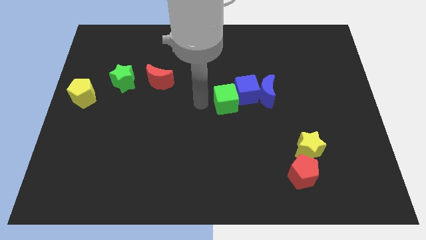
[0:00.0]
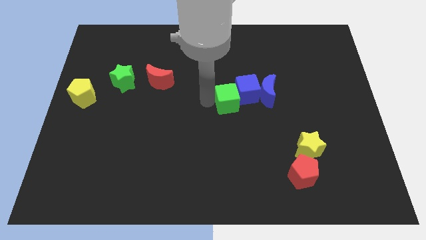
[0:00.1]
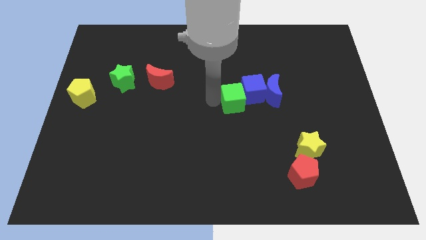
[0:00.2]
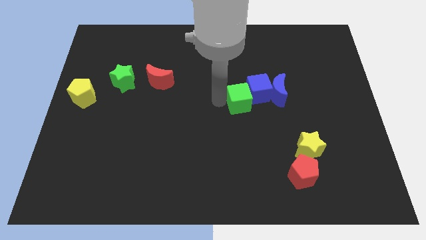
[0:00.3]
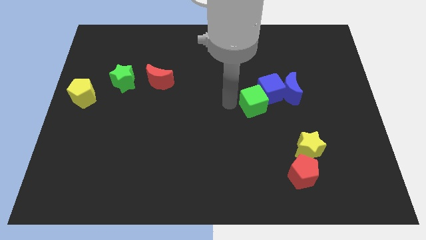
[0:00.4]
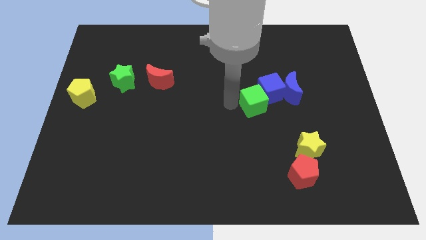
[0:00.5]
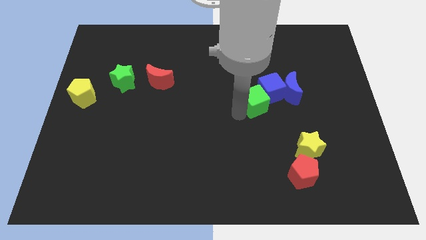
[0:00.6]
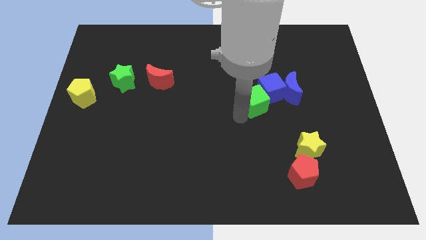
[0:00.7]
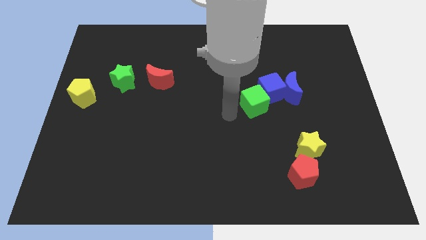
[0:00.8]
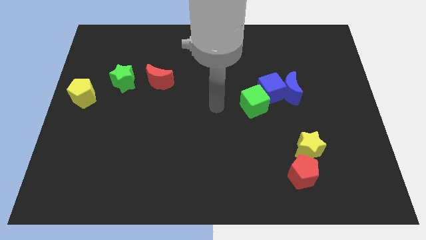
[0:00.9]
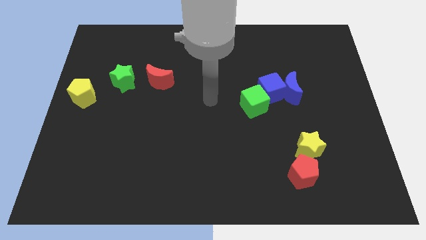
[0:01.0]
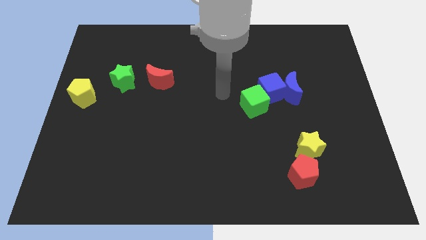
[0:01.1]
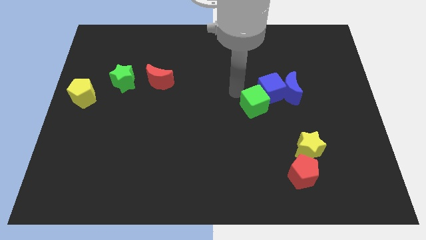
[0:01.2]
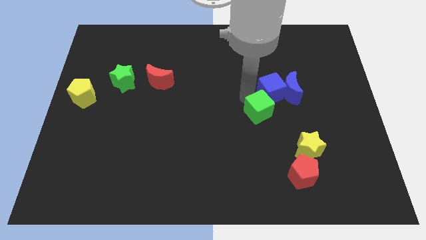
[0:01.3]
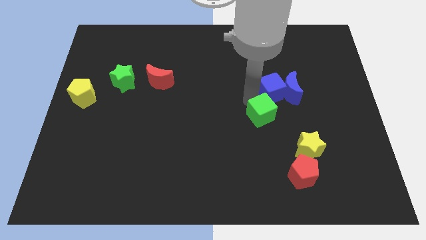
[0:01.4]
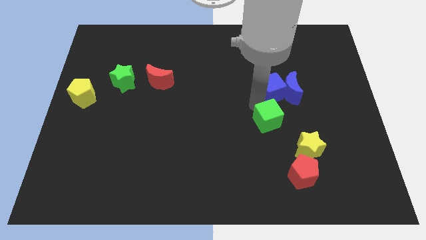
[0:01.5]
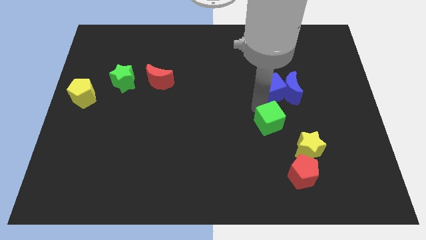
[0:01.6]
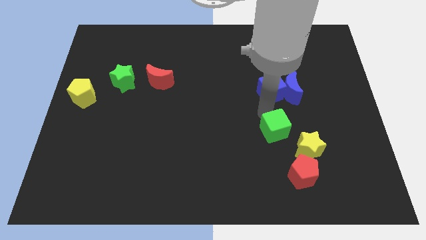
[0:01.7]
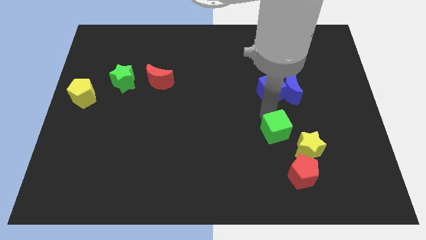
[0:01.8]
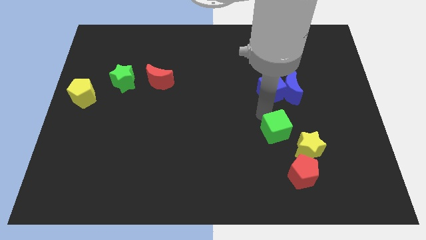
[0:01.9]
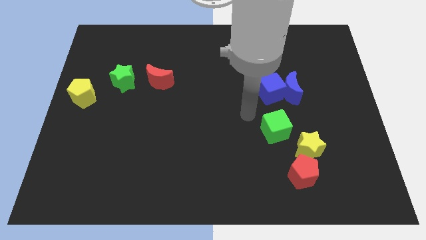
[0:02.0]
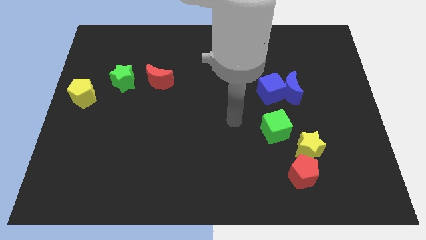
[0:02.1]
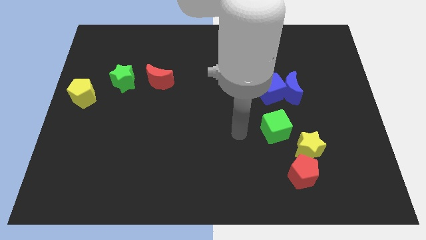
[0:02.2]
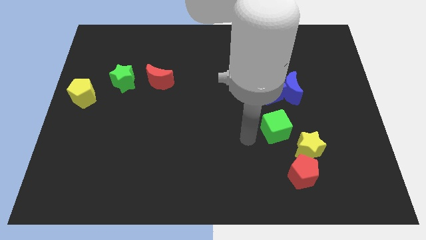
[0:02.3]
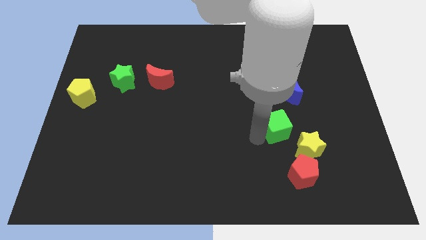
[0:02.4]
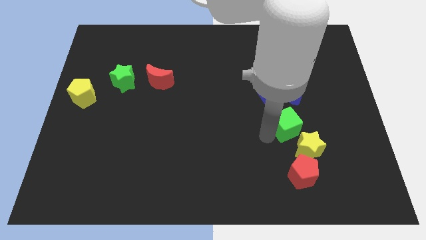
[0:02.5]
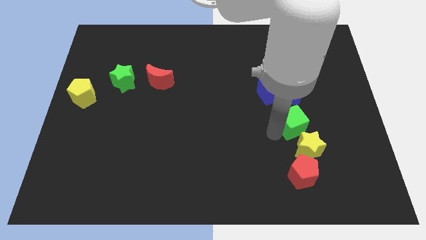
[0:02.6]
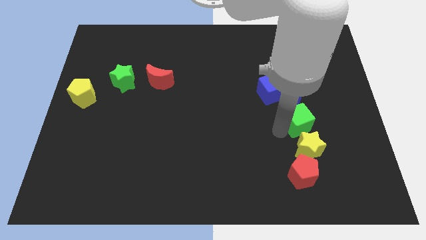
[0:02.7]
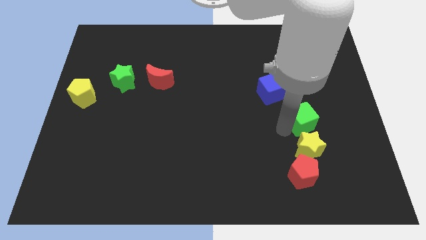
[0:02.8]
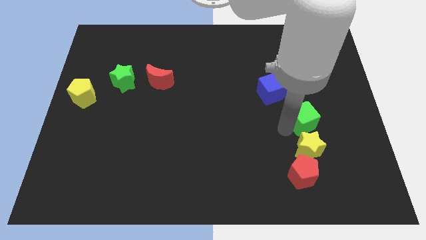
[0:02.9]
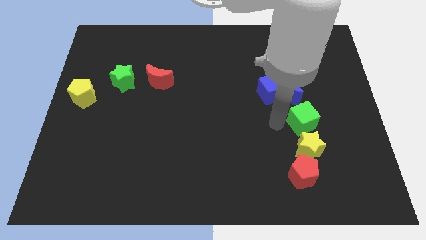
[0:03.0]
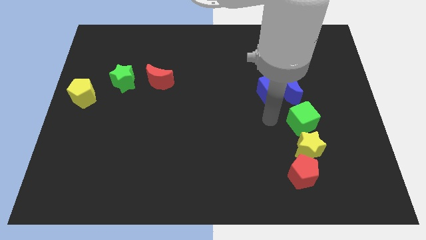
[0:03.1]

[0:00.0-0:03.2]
put the green cube above the yellow star

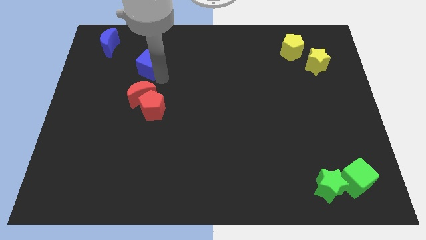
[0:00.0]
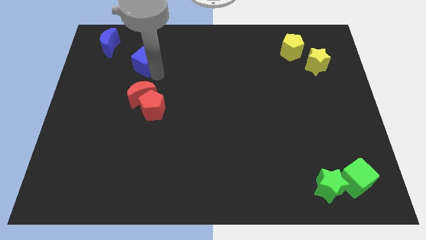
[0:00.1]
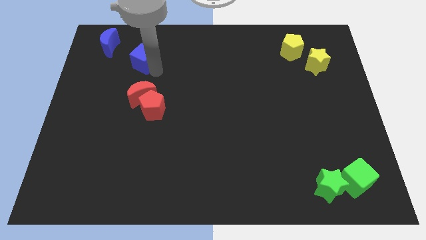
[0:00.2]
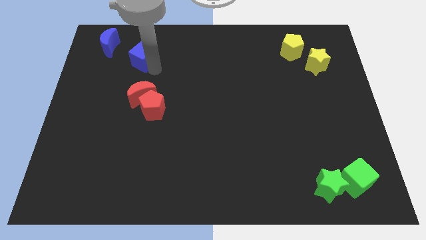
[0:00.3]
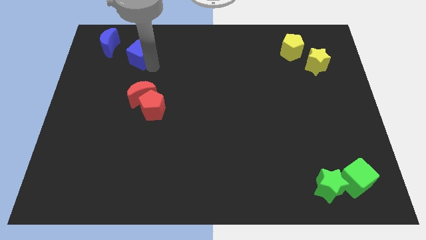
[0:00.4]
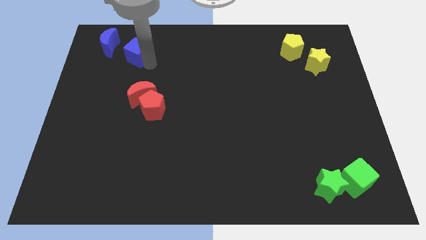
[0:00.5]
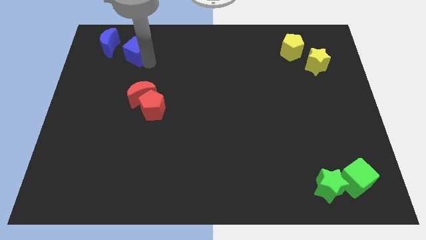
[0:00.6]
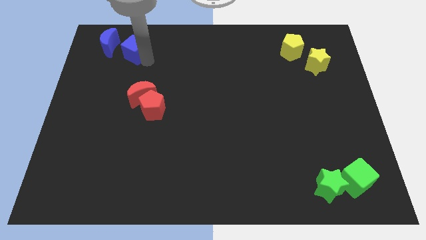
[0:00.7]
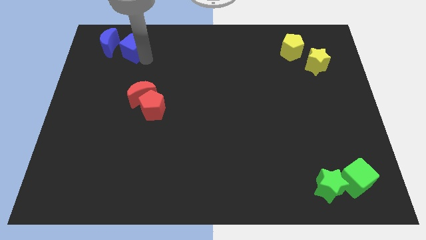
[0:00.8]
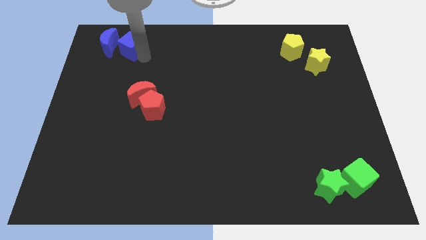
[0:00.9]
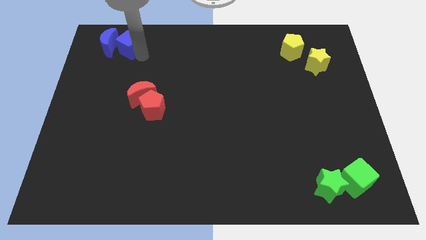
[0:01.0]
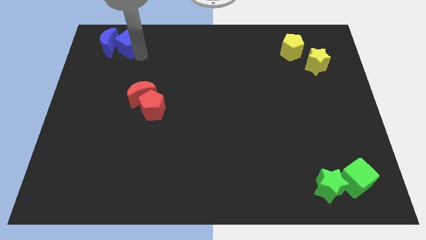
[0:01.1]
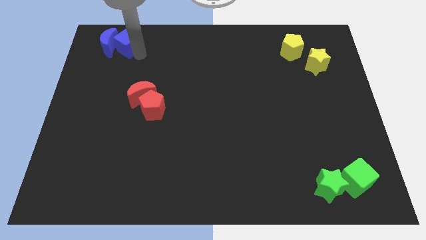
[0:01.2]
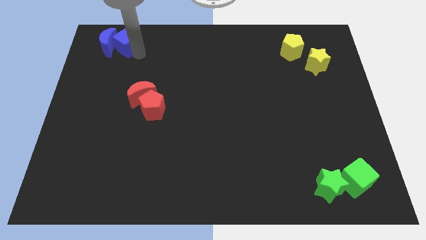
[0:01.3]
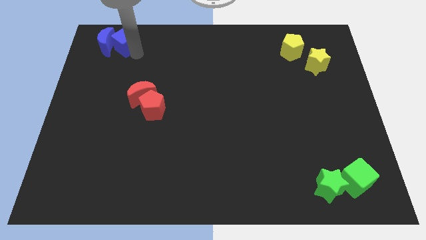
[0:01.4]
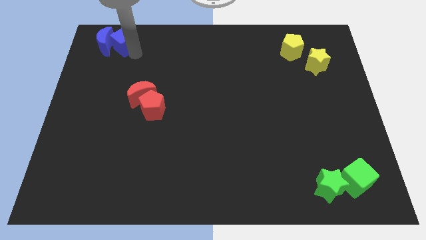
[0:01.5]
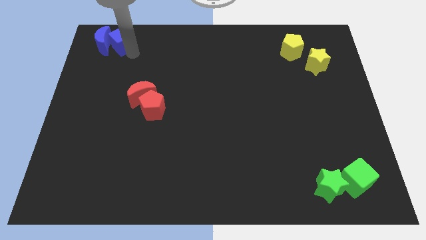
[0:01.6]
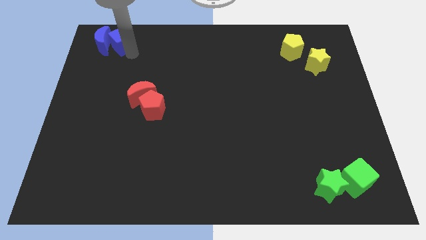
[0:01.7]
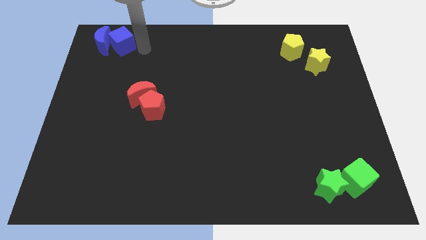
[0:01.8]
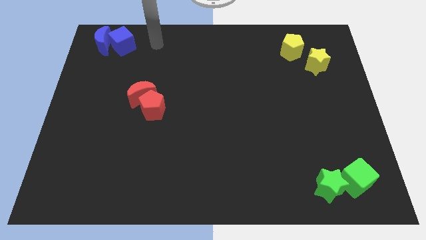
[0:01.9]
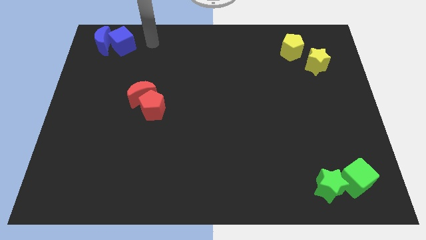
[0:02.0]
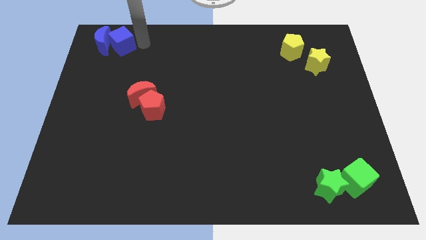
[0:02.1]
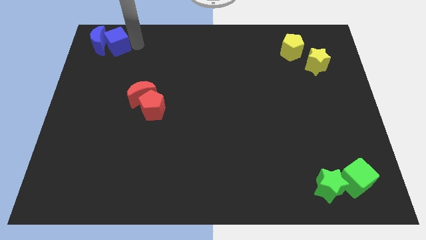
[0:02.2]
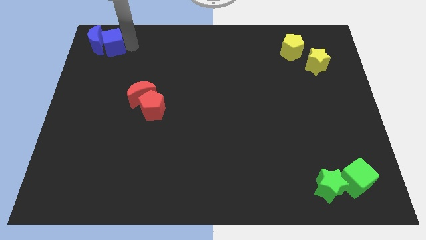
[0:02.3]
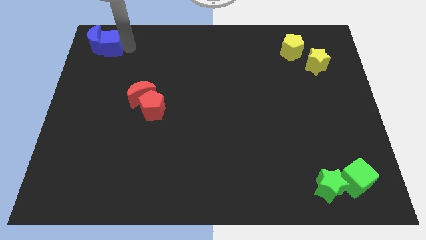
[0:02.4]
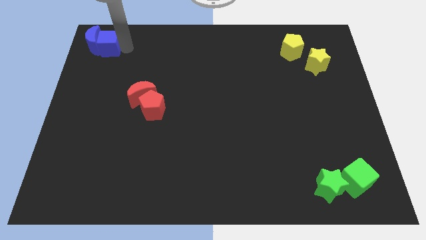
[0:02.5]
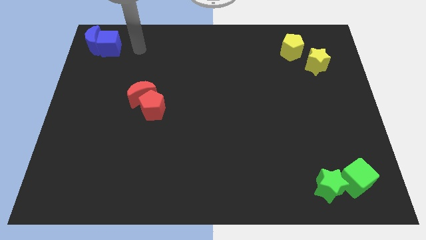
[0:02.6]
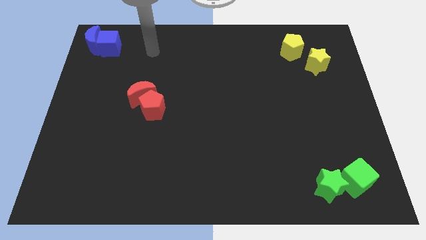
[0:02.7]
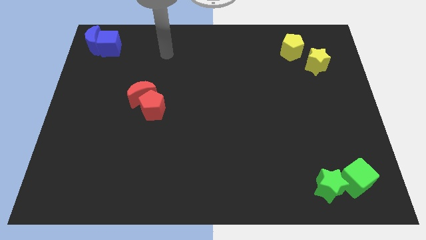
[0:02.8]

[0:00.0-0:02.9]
push blue moon and blue cube together towards the top left corner

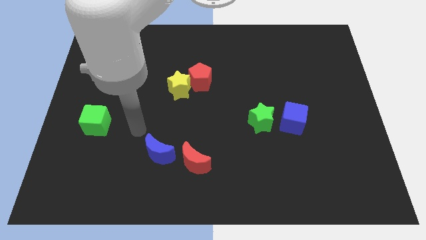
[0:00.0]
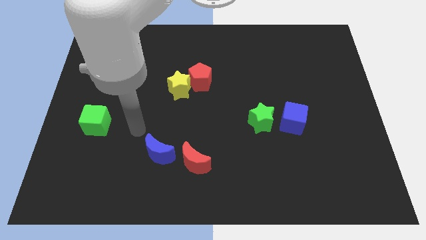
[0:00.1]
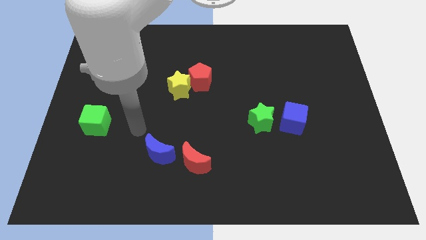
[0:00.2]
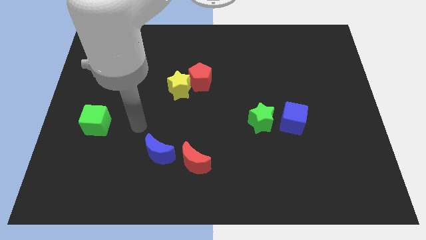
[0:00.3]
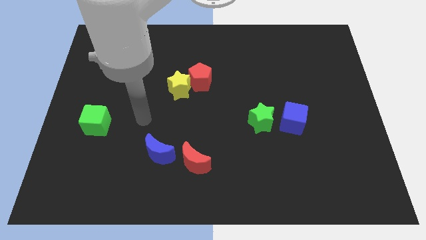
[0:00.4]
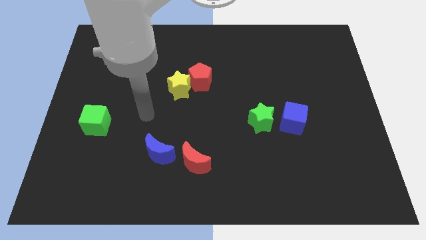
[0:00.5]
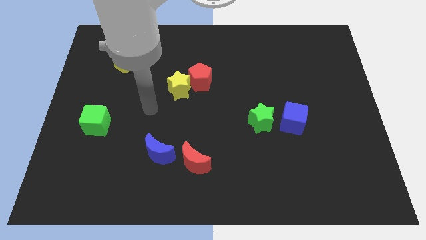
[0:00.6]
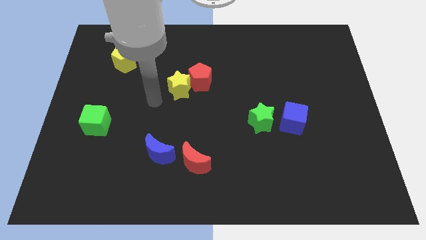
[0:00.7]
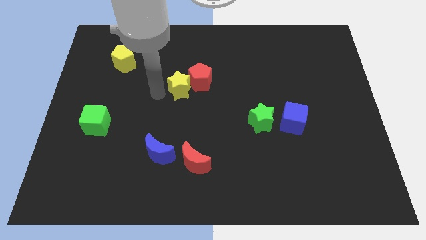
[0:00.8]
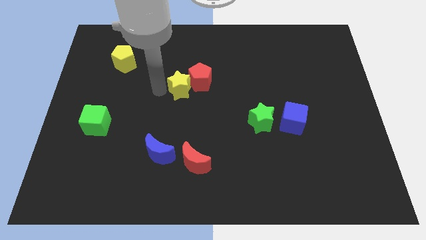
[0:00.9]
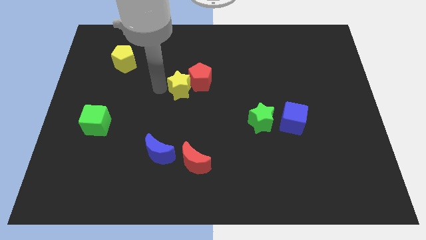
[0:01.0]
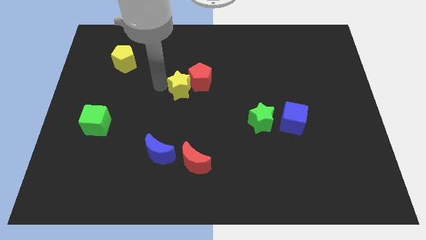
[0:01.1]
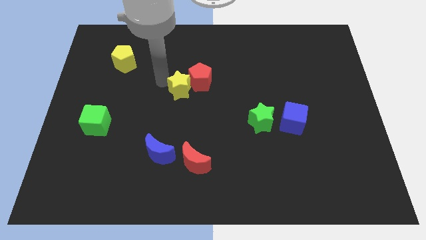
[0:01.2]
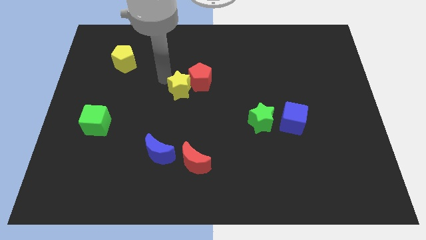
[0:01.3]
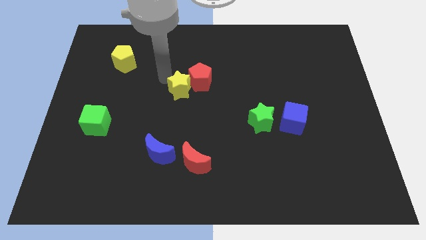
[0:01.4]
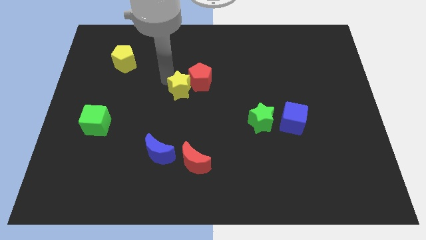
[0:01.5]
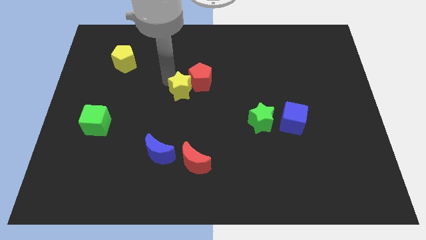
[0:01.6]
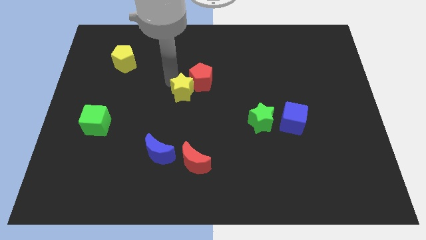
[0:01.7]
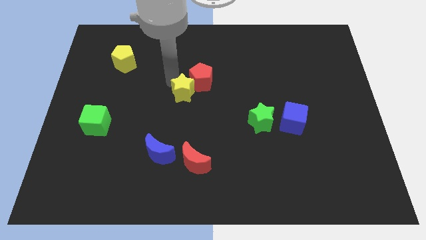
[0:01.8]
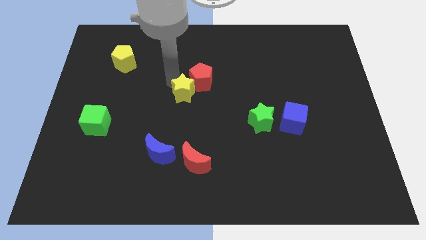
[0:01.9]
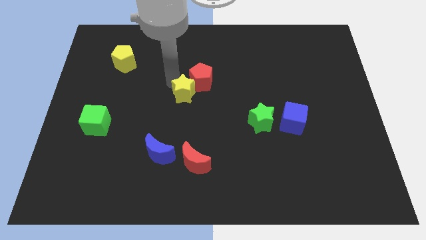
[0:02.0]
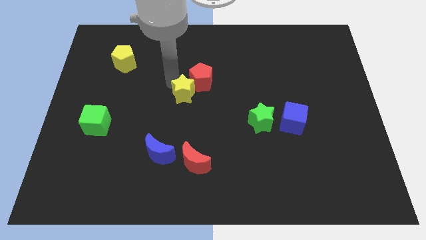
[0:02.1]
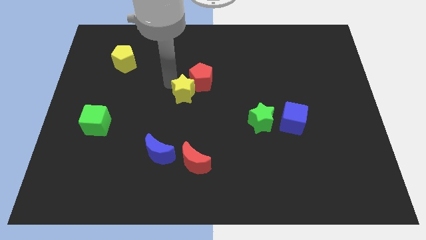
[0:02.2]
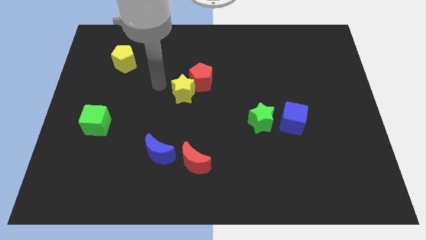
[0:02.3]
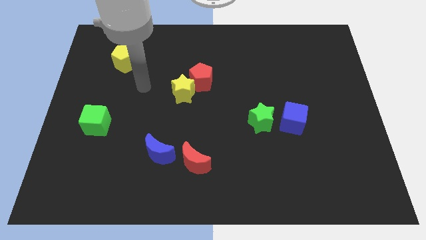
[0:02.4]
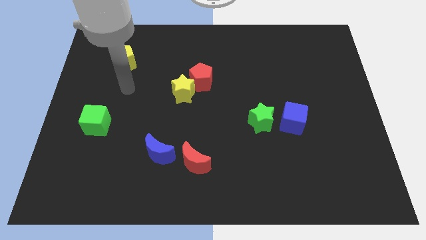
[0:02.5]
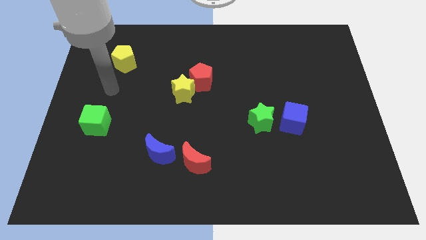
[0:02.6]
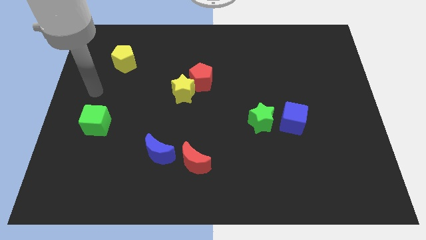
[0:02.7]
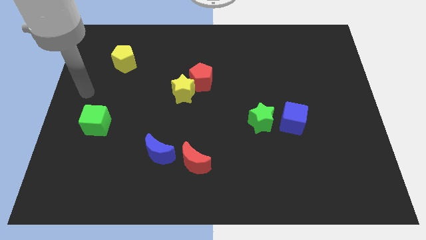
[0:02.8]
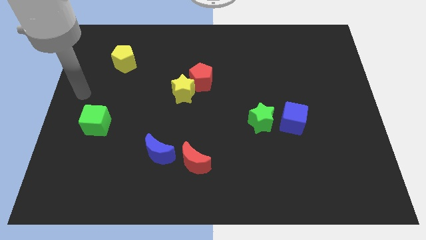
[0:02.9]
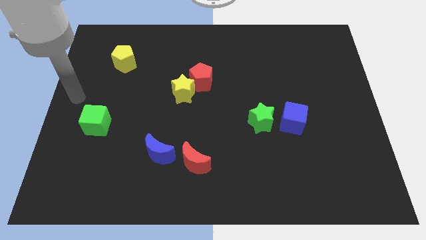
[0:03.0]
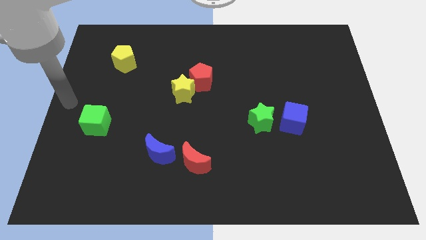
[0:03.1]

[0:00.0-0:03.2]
slightly push the yellow star towards the bottom and move away
